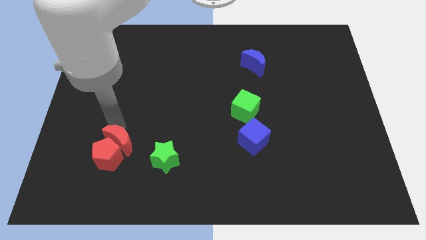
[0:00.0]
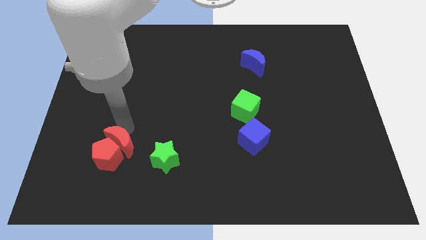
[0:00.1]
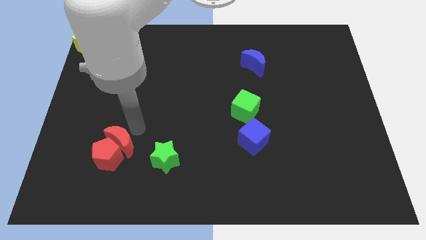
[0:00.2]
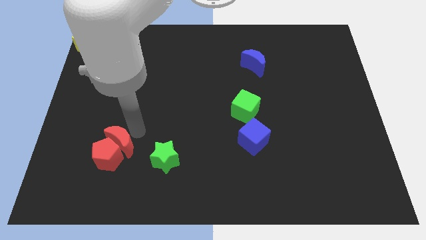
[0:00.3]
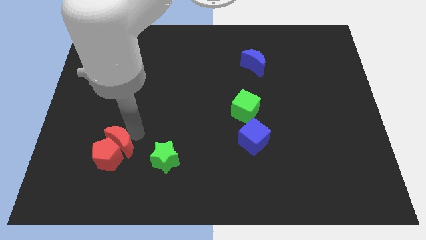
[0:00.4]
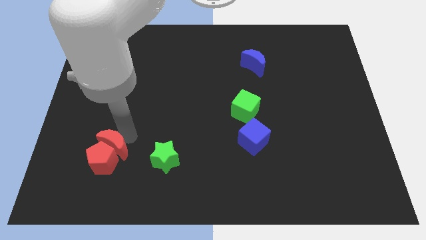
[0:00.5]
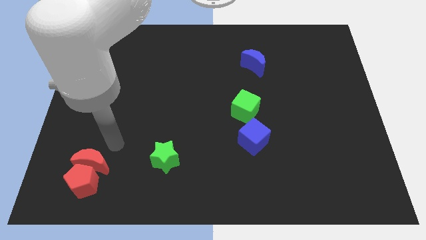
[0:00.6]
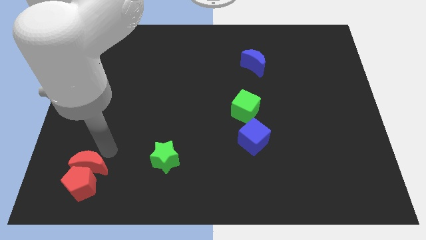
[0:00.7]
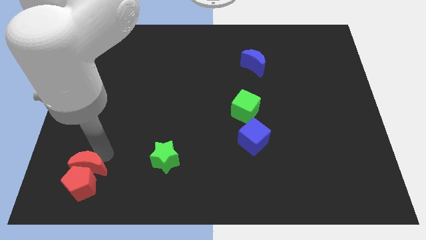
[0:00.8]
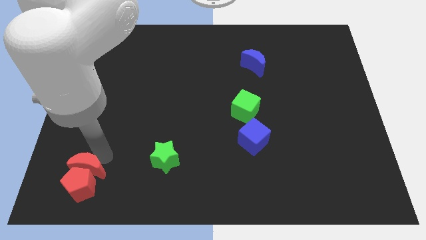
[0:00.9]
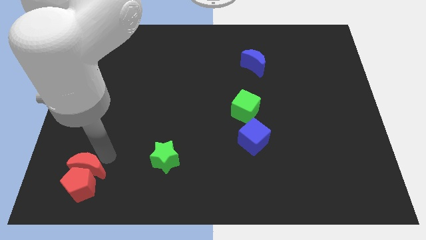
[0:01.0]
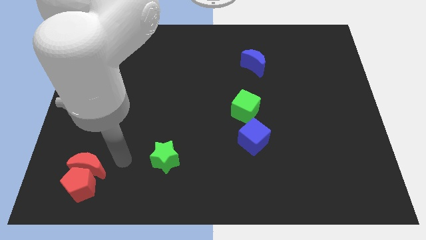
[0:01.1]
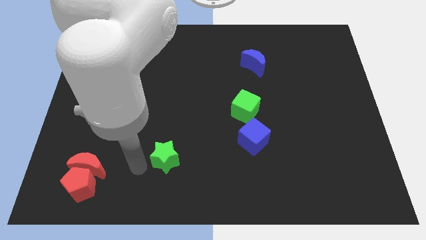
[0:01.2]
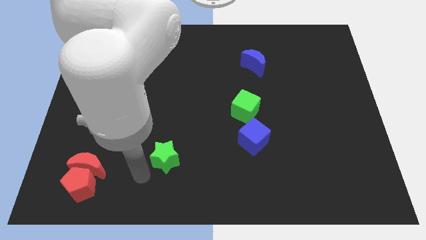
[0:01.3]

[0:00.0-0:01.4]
push both the red blocks slightly to the bottom side of the board

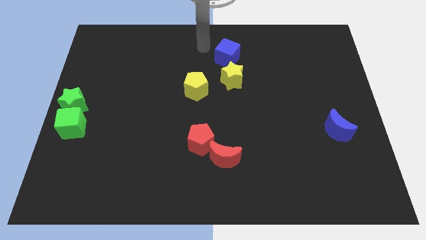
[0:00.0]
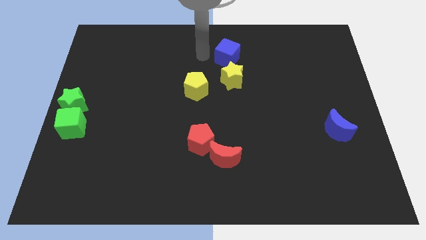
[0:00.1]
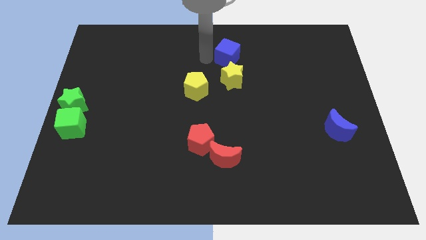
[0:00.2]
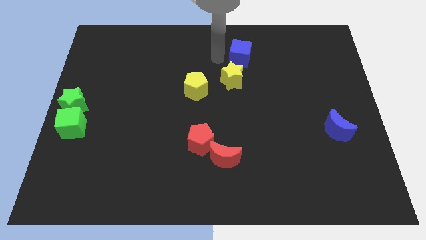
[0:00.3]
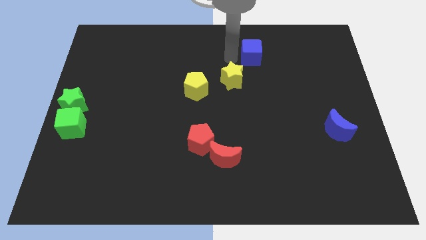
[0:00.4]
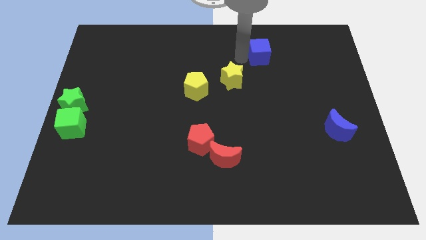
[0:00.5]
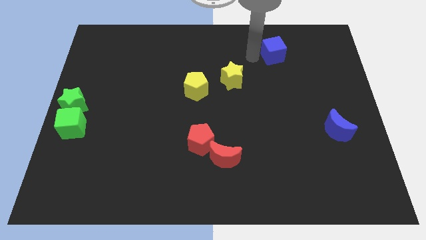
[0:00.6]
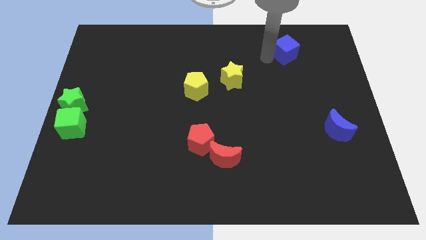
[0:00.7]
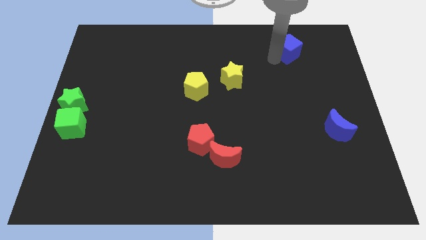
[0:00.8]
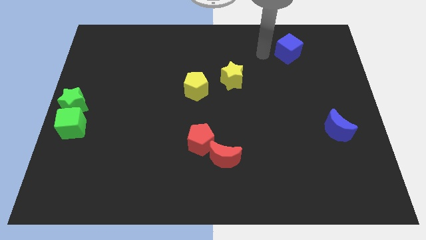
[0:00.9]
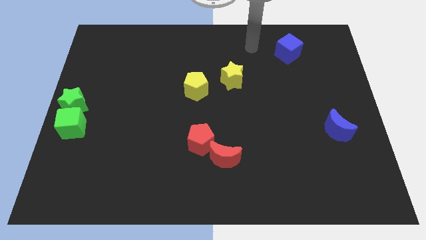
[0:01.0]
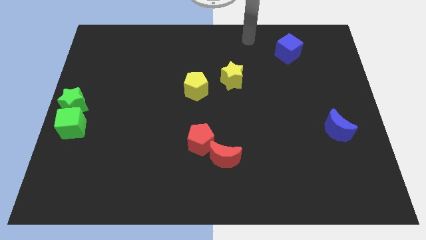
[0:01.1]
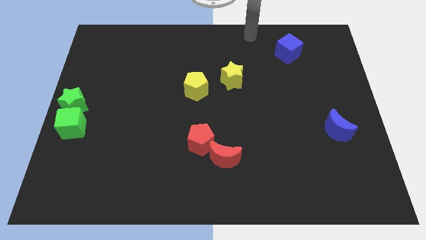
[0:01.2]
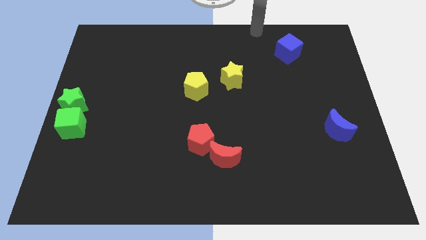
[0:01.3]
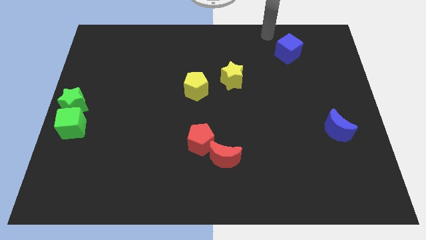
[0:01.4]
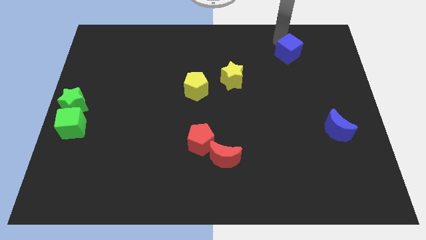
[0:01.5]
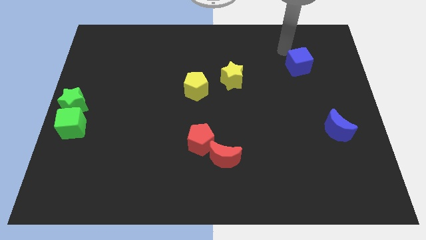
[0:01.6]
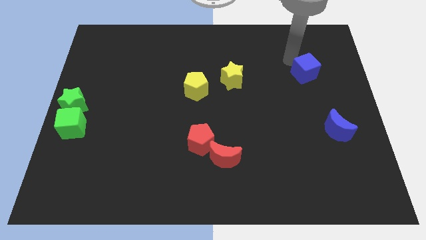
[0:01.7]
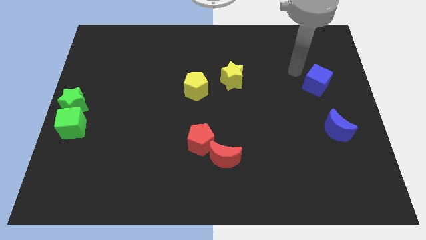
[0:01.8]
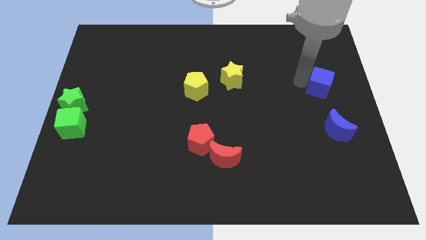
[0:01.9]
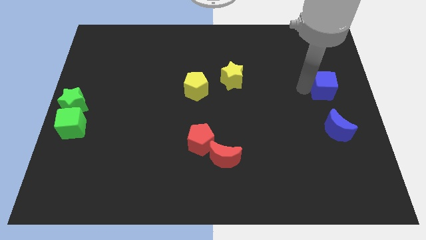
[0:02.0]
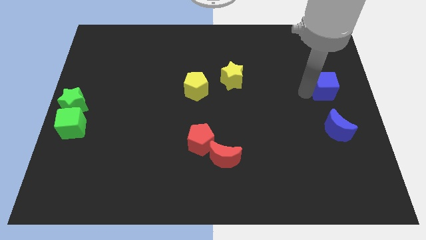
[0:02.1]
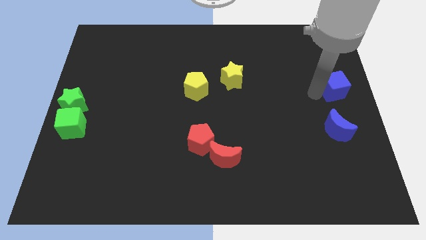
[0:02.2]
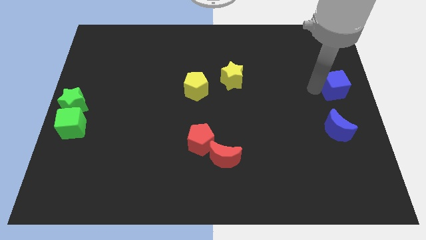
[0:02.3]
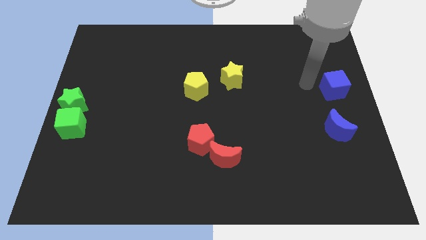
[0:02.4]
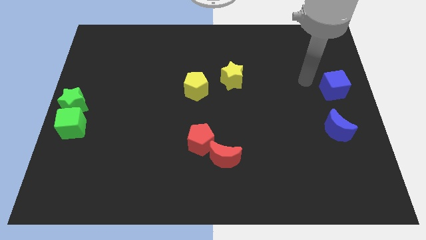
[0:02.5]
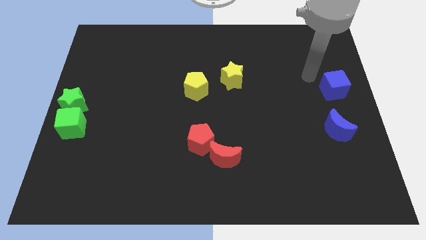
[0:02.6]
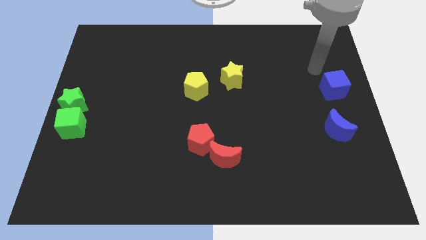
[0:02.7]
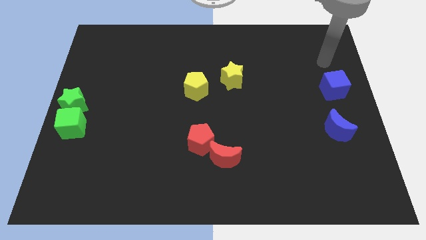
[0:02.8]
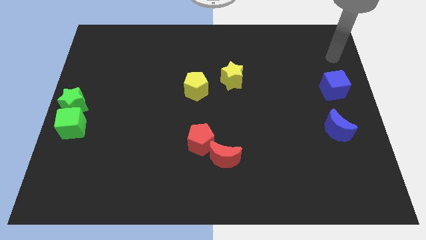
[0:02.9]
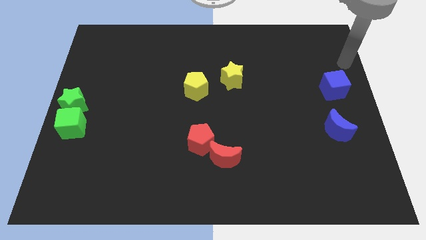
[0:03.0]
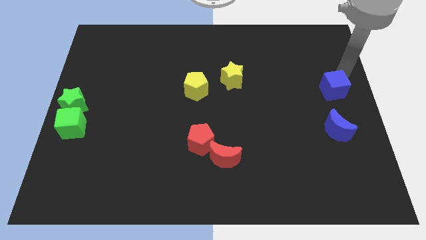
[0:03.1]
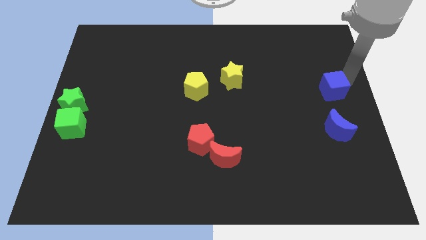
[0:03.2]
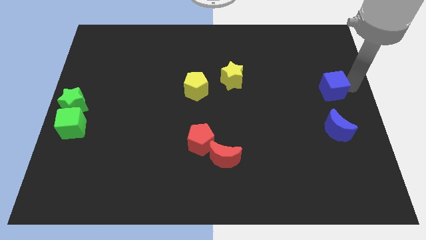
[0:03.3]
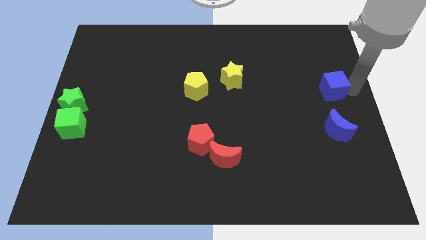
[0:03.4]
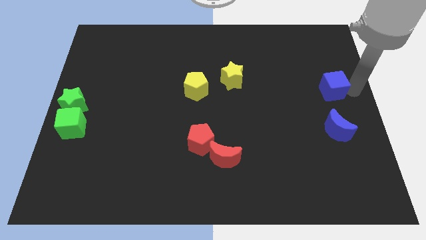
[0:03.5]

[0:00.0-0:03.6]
push the blue cube to the top of the blue crescent

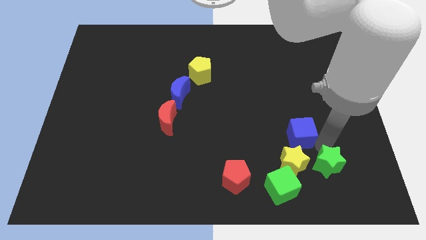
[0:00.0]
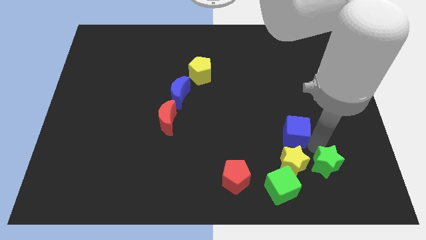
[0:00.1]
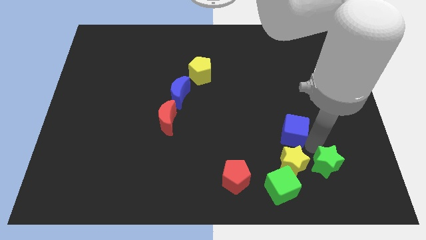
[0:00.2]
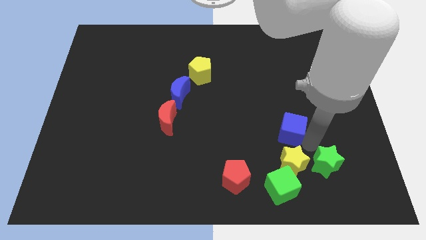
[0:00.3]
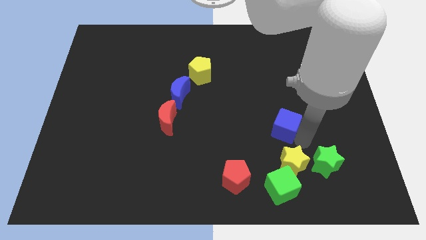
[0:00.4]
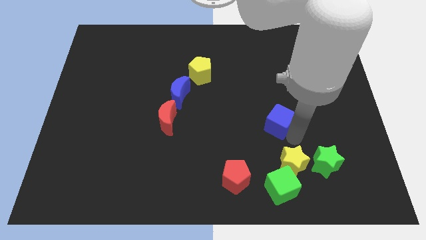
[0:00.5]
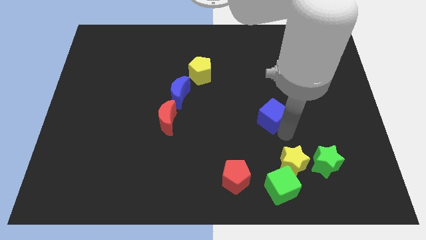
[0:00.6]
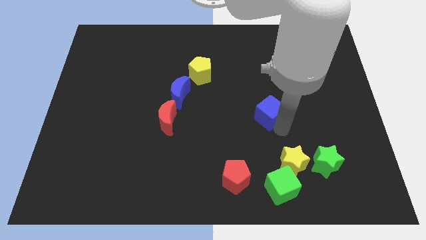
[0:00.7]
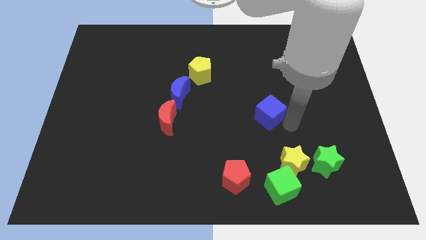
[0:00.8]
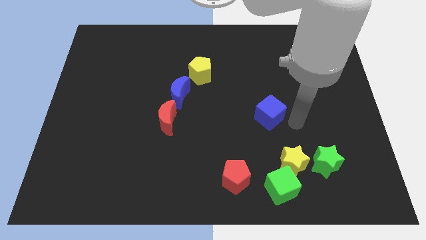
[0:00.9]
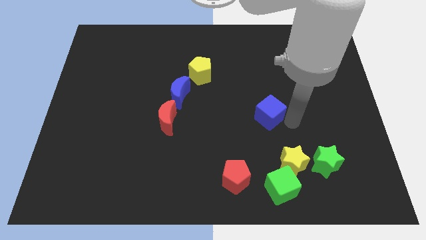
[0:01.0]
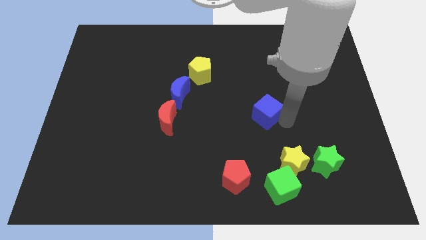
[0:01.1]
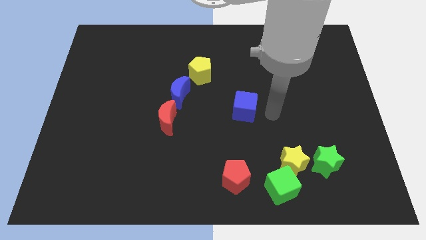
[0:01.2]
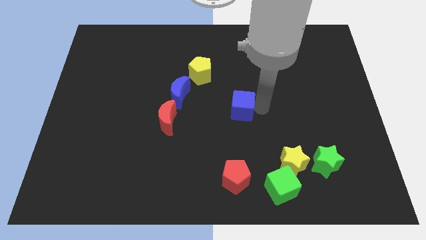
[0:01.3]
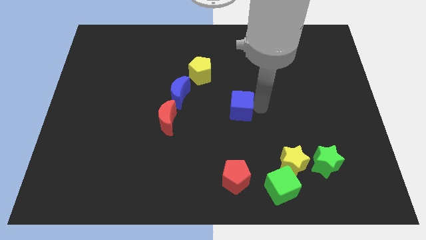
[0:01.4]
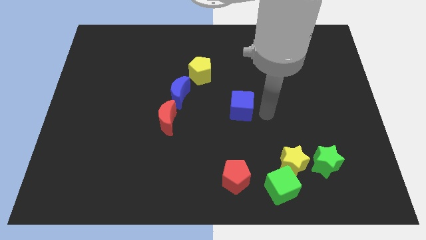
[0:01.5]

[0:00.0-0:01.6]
move blue cube apart from green star

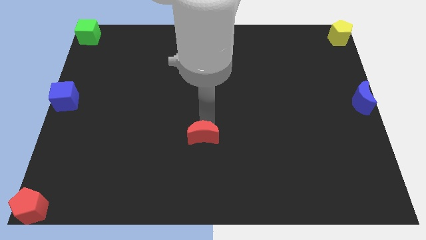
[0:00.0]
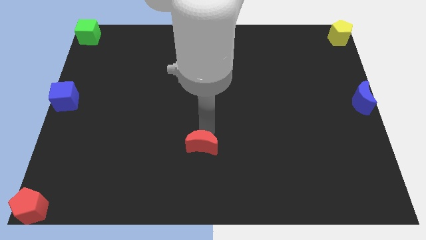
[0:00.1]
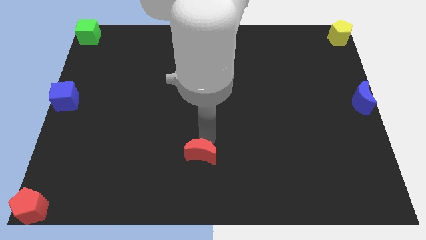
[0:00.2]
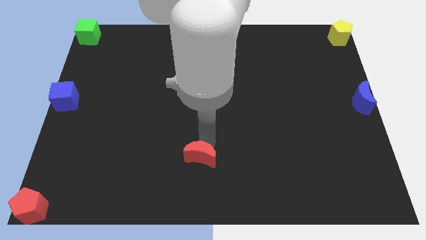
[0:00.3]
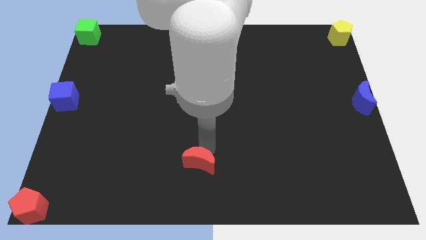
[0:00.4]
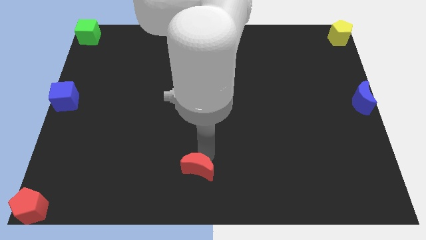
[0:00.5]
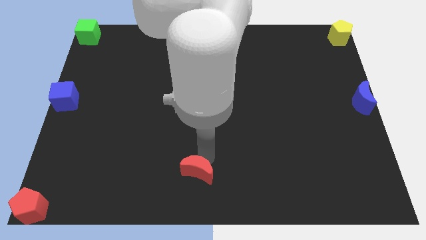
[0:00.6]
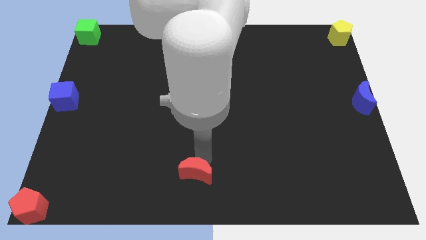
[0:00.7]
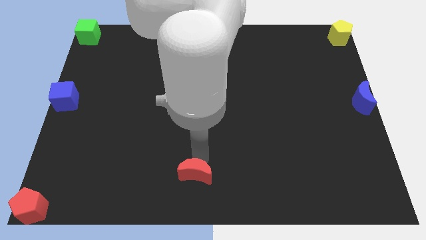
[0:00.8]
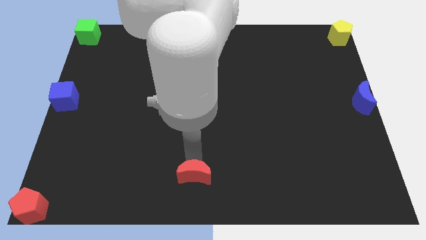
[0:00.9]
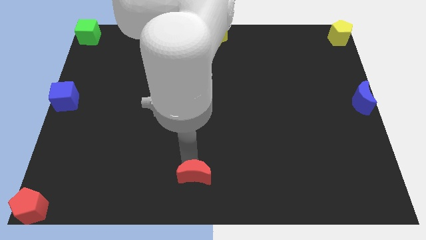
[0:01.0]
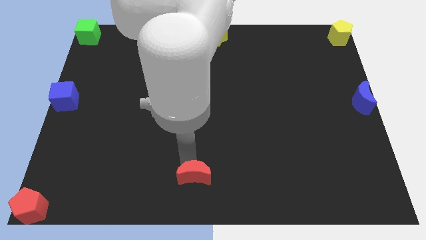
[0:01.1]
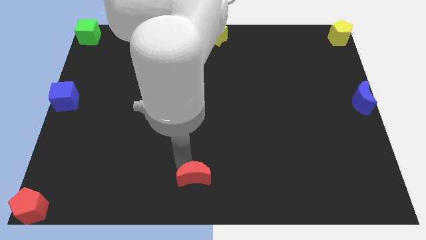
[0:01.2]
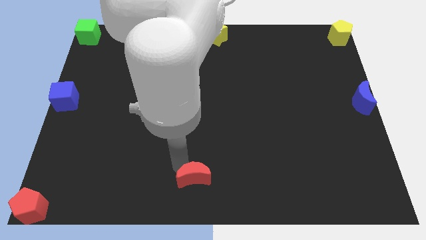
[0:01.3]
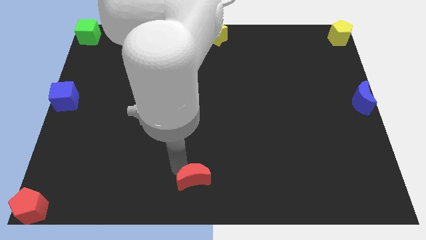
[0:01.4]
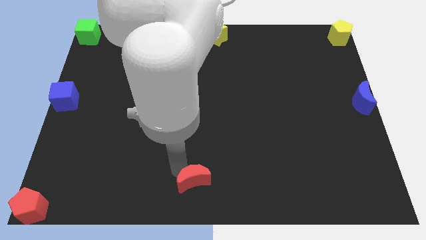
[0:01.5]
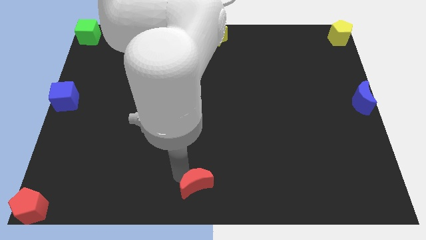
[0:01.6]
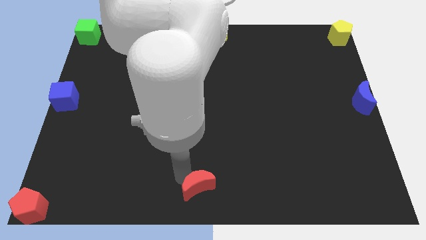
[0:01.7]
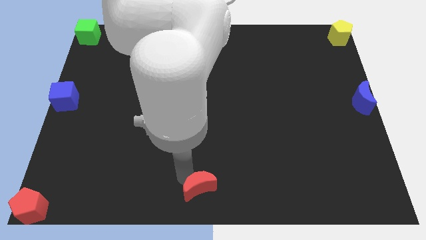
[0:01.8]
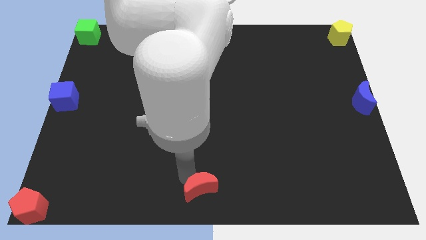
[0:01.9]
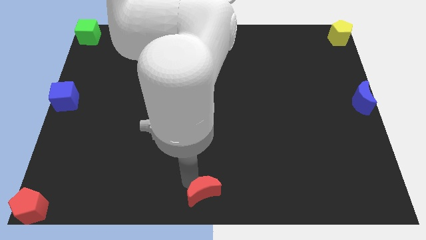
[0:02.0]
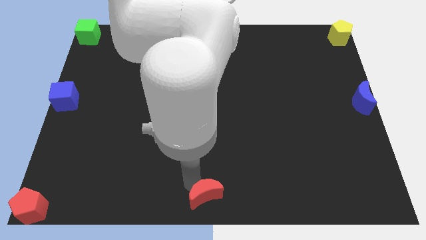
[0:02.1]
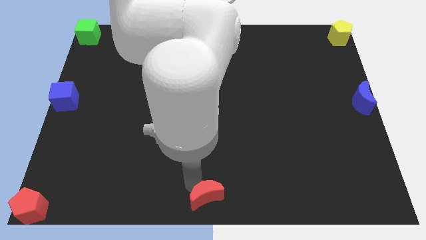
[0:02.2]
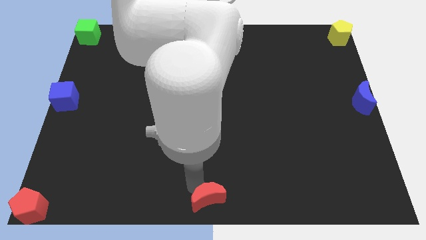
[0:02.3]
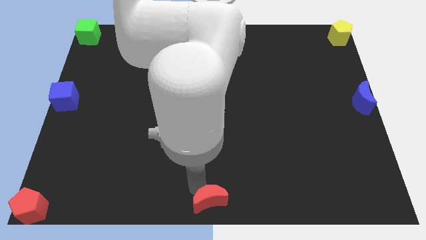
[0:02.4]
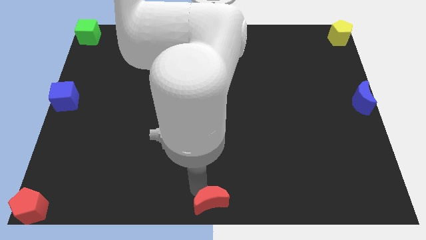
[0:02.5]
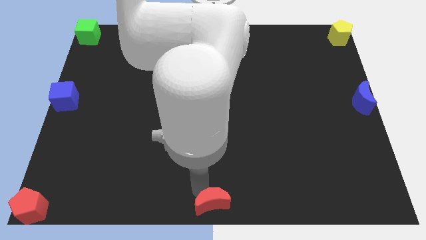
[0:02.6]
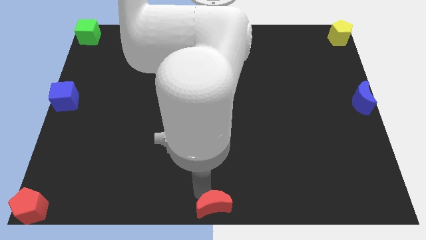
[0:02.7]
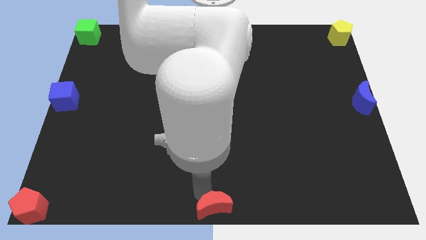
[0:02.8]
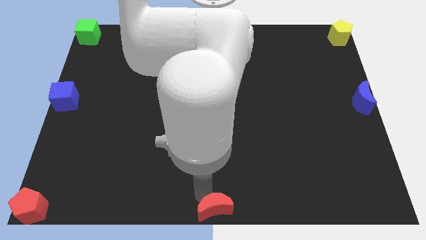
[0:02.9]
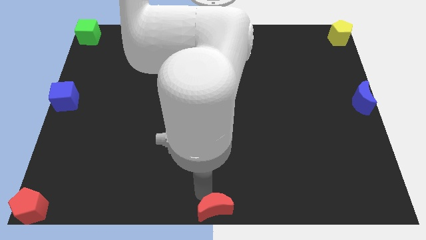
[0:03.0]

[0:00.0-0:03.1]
move the red moon to the bottom middle
